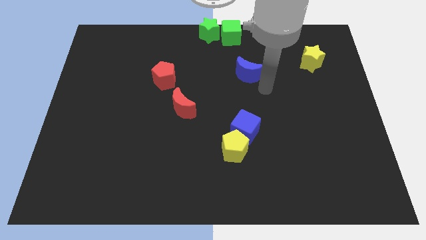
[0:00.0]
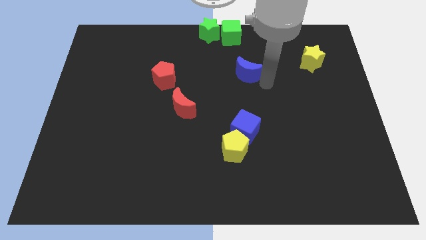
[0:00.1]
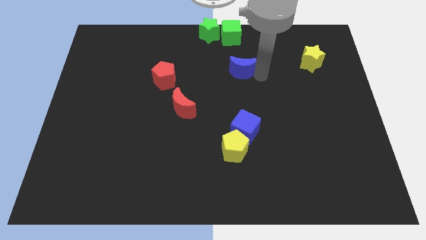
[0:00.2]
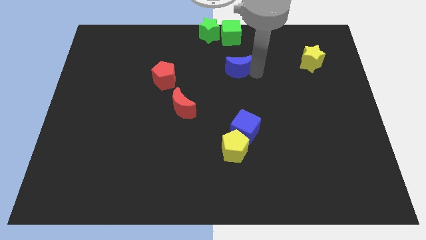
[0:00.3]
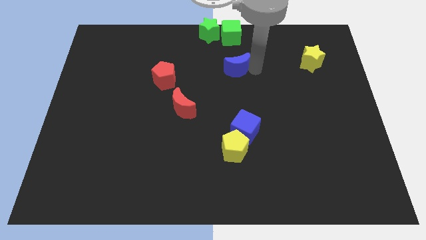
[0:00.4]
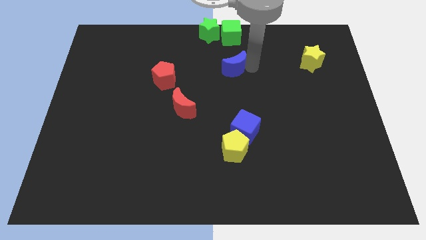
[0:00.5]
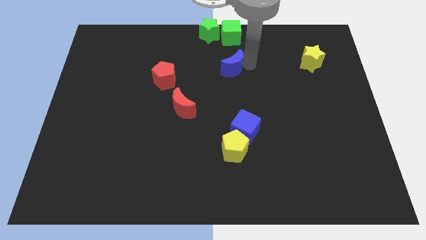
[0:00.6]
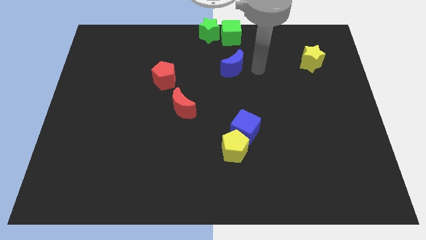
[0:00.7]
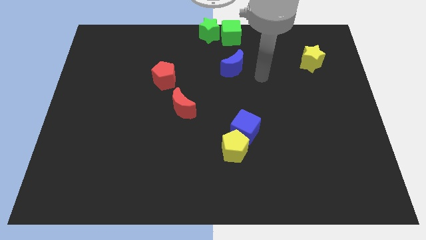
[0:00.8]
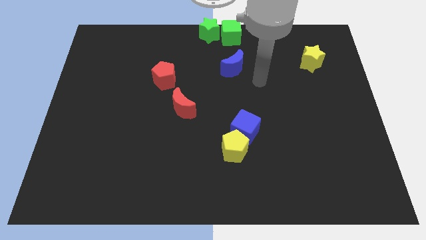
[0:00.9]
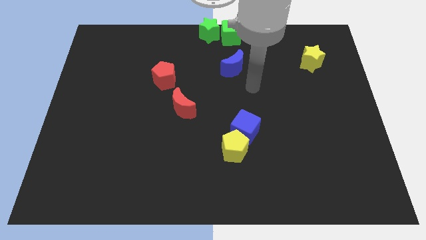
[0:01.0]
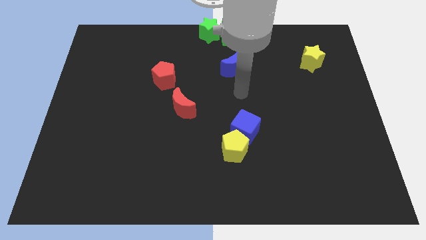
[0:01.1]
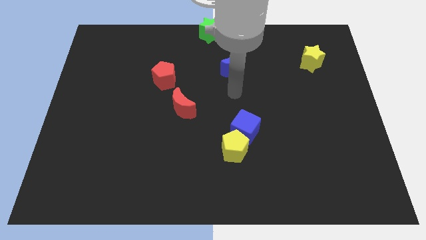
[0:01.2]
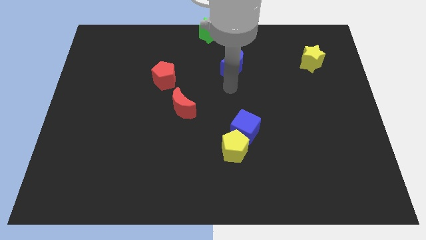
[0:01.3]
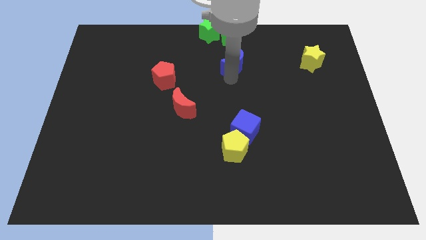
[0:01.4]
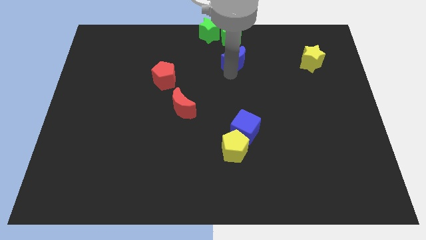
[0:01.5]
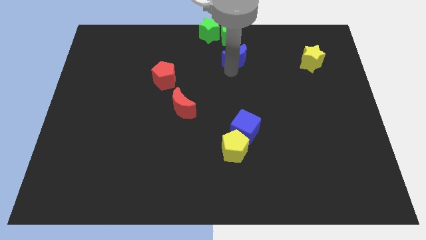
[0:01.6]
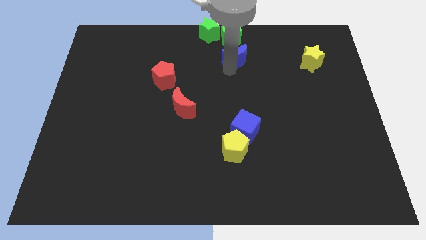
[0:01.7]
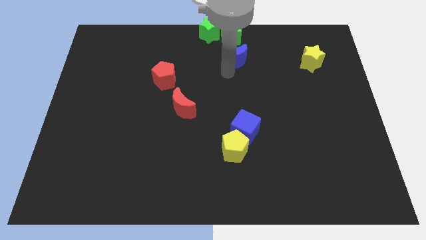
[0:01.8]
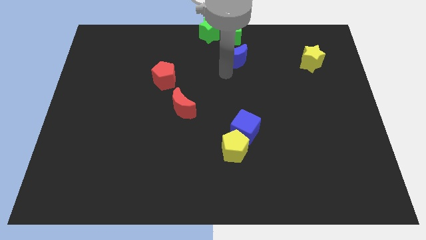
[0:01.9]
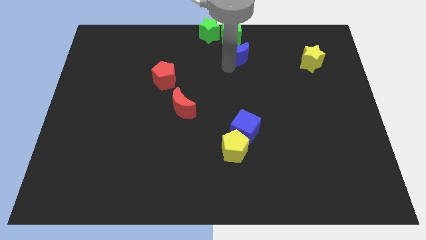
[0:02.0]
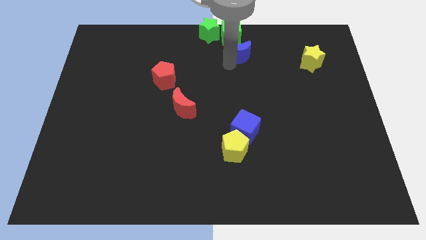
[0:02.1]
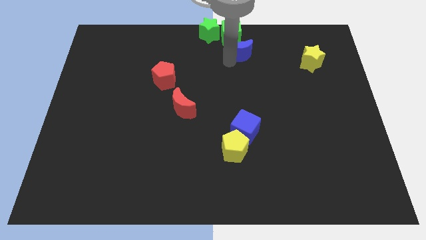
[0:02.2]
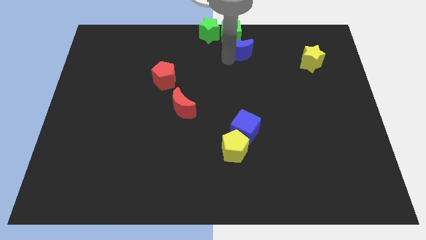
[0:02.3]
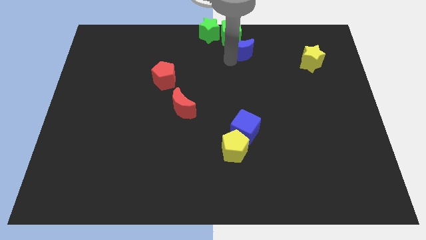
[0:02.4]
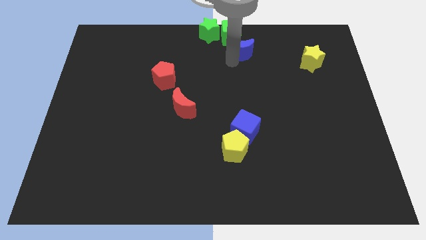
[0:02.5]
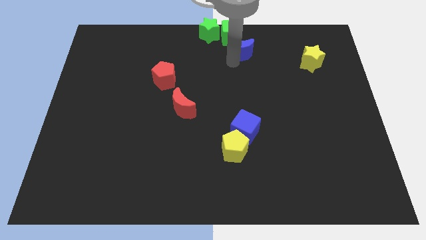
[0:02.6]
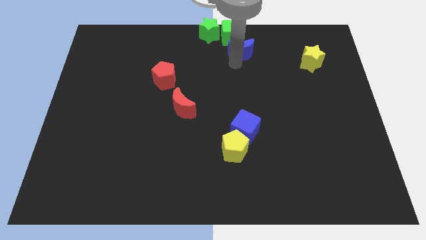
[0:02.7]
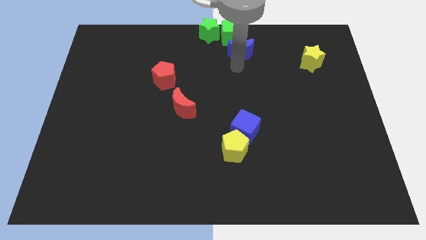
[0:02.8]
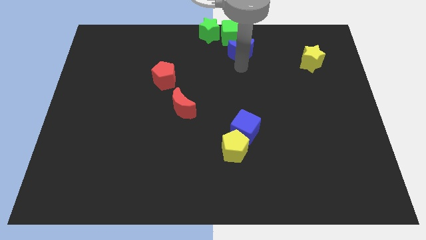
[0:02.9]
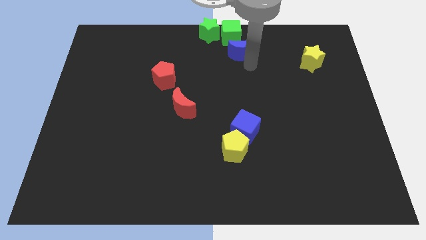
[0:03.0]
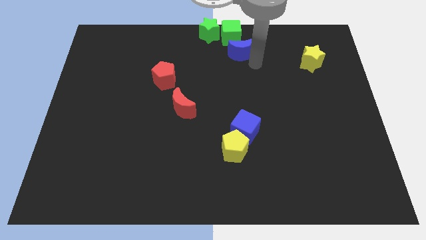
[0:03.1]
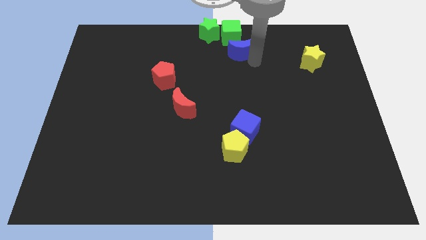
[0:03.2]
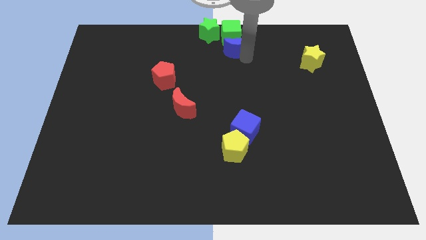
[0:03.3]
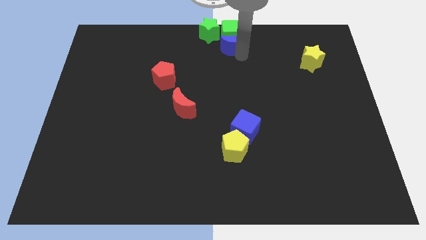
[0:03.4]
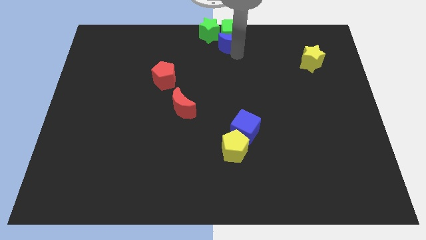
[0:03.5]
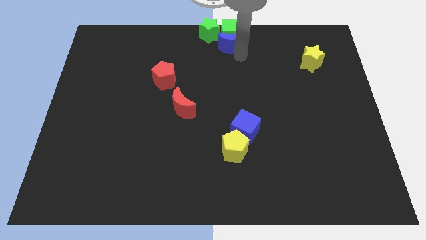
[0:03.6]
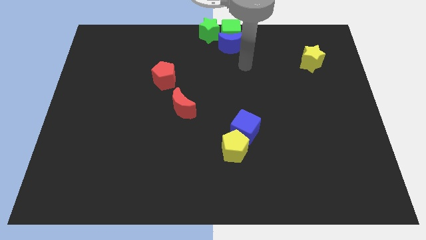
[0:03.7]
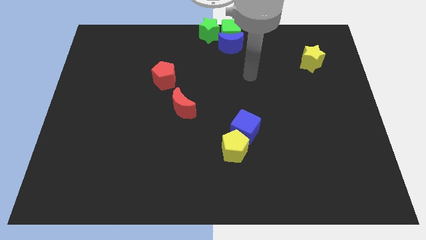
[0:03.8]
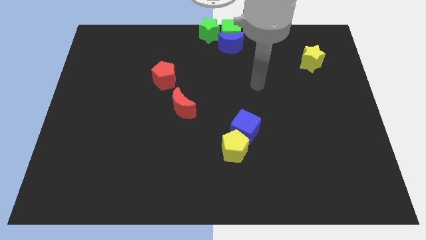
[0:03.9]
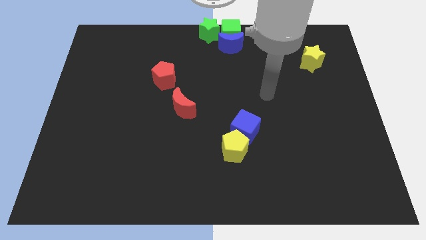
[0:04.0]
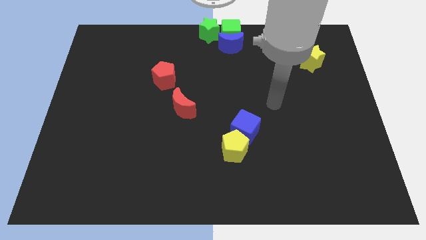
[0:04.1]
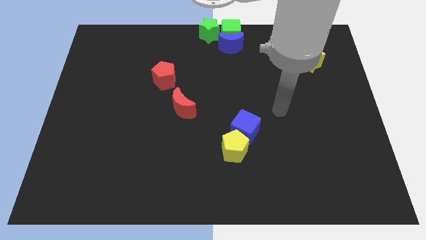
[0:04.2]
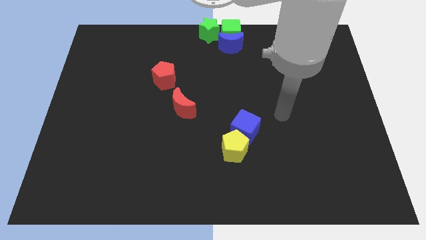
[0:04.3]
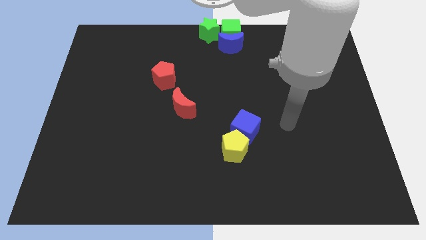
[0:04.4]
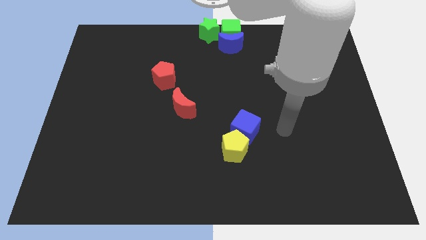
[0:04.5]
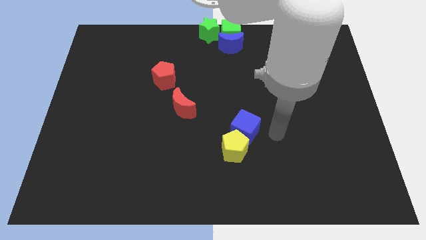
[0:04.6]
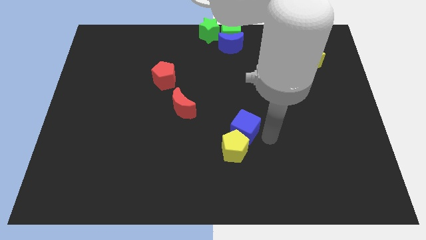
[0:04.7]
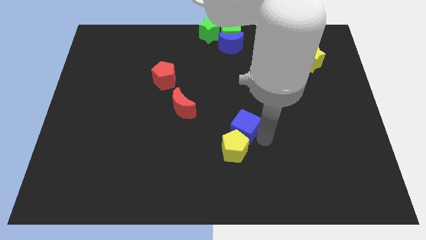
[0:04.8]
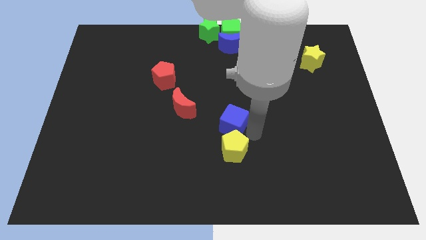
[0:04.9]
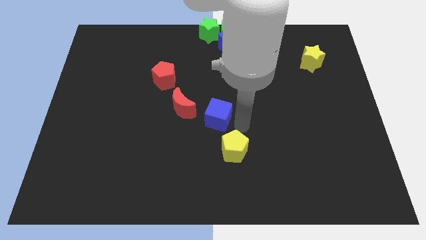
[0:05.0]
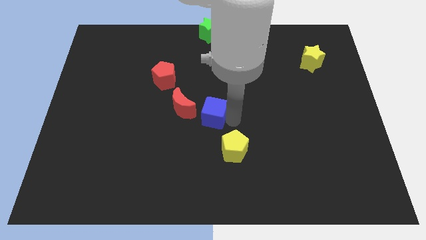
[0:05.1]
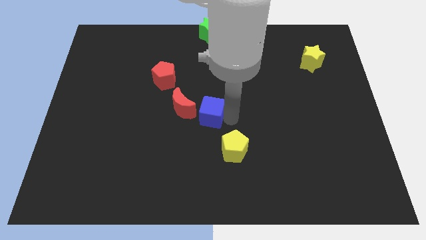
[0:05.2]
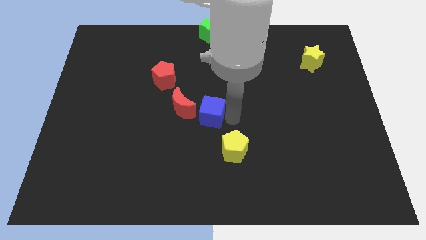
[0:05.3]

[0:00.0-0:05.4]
place the blue cube towards the left side of the red crescent

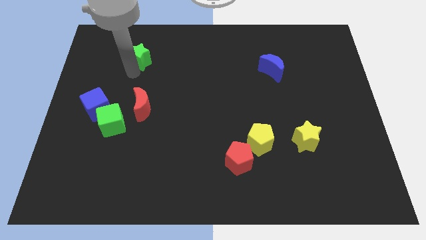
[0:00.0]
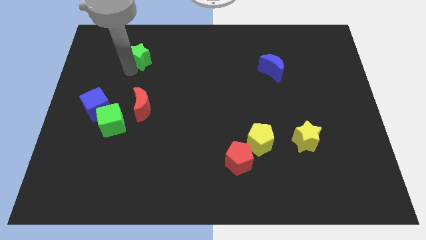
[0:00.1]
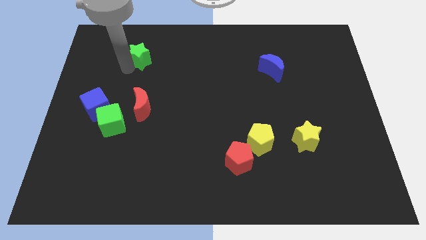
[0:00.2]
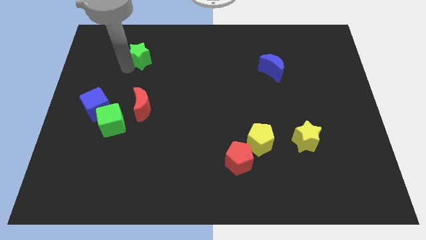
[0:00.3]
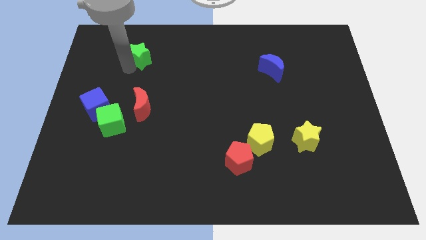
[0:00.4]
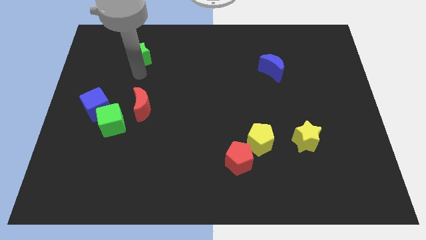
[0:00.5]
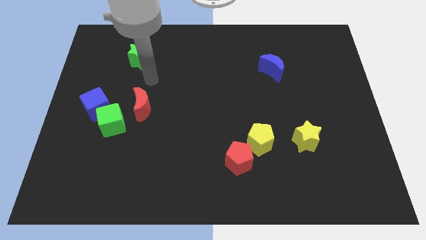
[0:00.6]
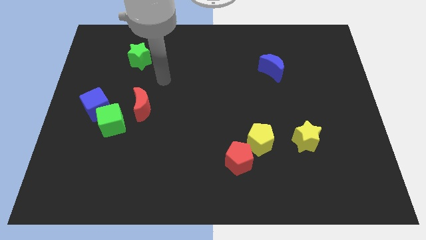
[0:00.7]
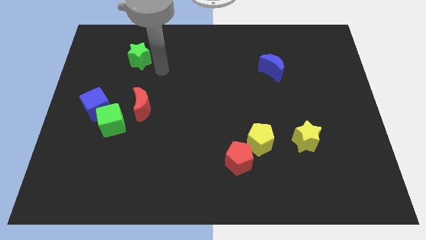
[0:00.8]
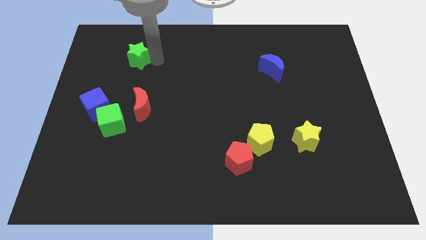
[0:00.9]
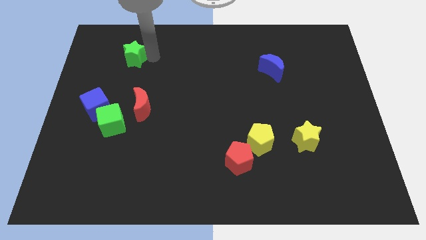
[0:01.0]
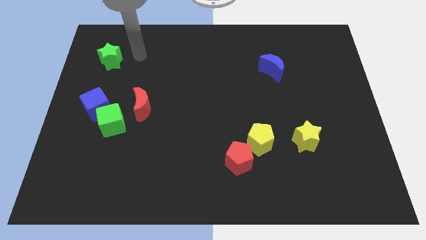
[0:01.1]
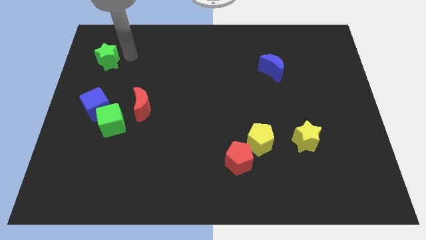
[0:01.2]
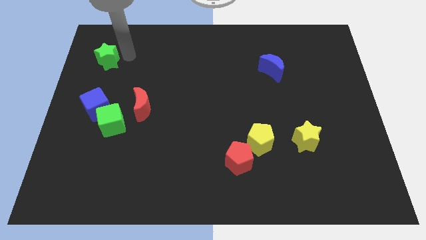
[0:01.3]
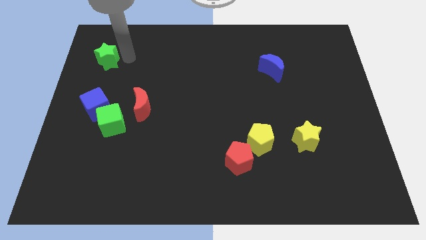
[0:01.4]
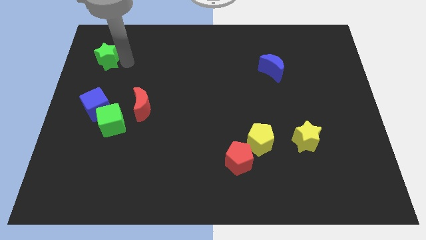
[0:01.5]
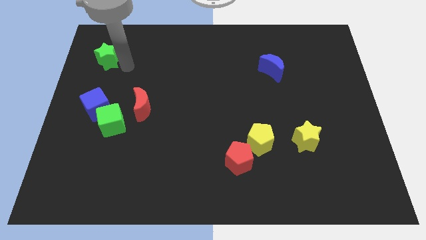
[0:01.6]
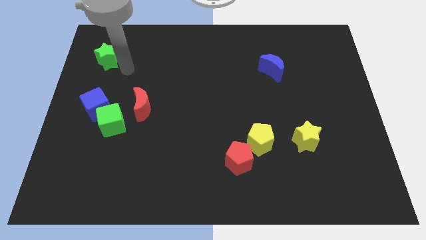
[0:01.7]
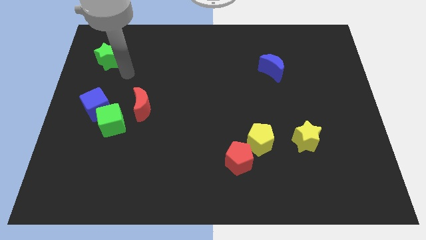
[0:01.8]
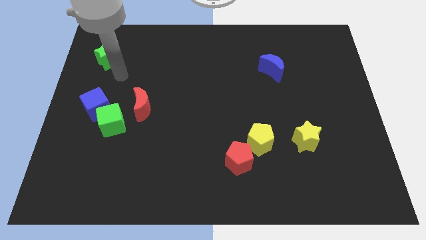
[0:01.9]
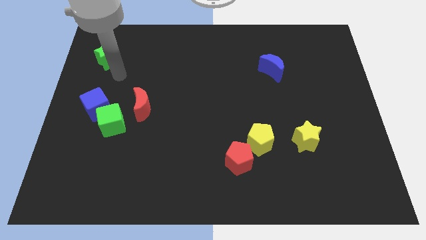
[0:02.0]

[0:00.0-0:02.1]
place green star top right of the blue cube

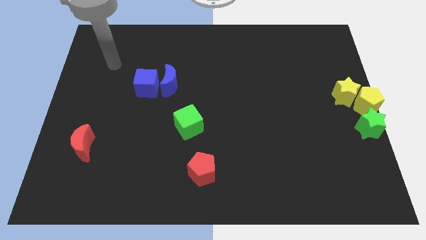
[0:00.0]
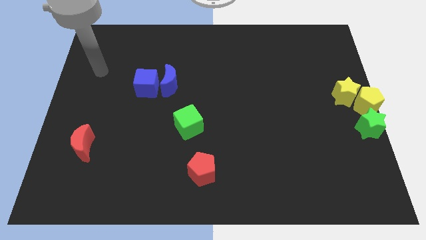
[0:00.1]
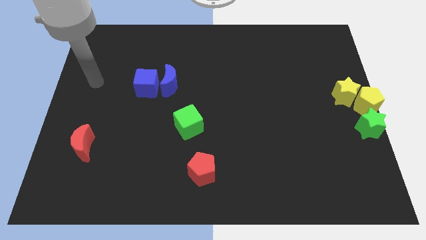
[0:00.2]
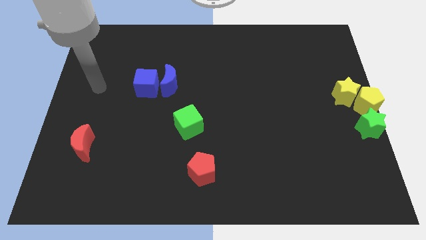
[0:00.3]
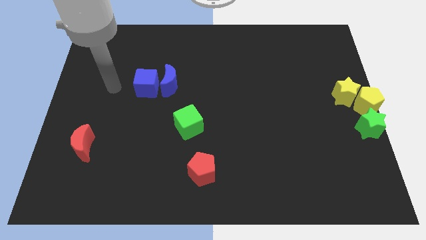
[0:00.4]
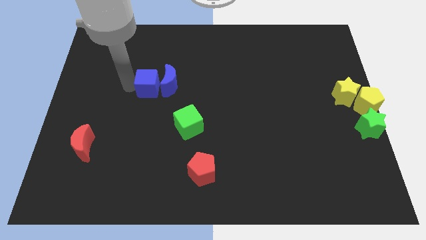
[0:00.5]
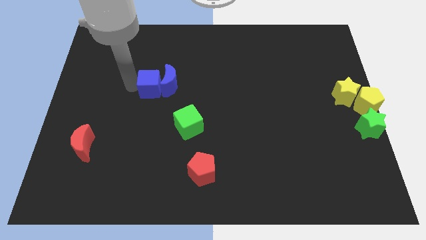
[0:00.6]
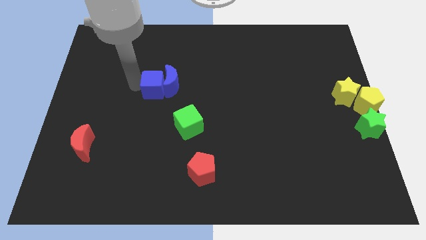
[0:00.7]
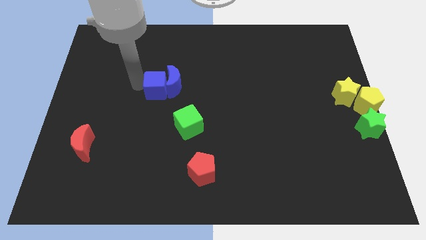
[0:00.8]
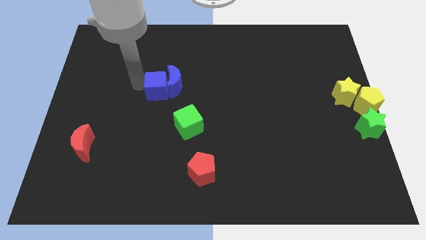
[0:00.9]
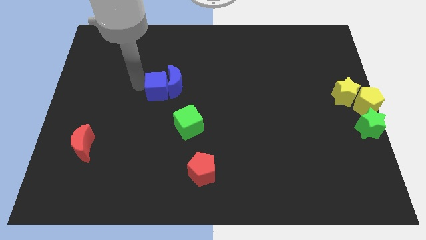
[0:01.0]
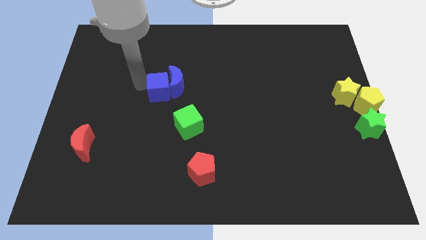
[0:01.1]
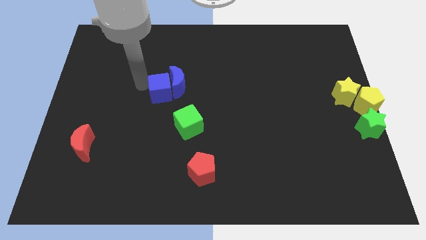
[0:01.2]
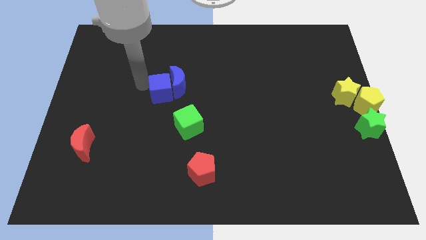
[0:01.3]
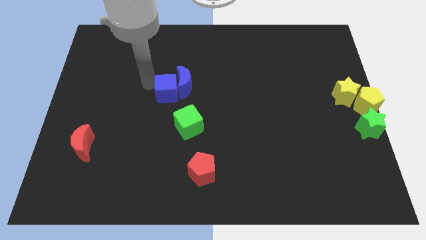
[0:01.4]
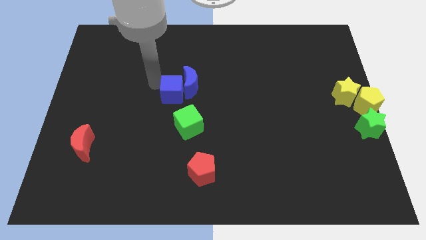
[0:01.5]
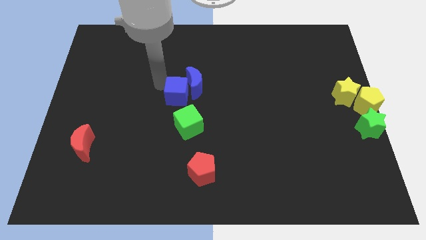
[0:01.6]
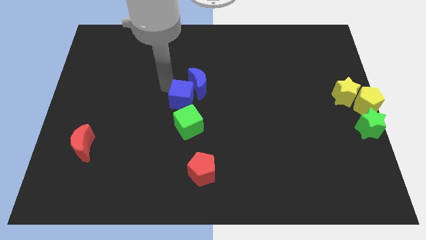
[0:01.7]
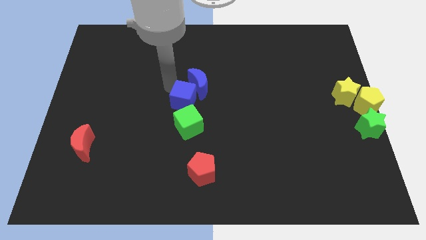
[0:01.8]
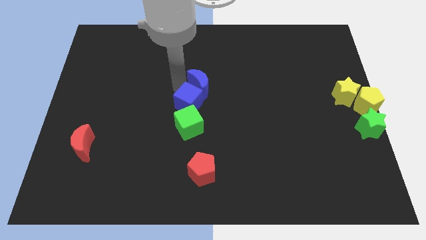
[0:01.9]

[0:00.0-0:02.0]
push blue cube into blue crescent
